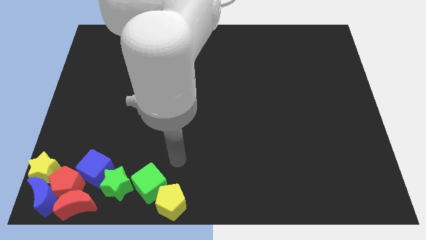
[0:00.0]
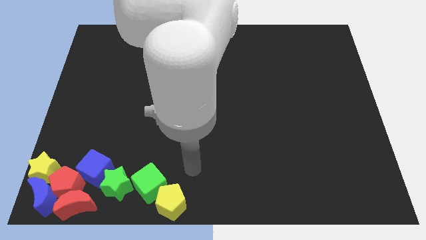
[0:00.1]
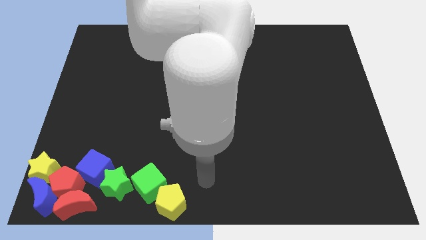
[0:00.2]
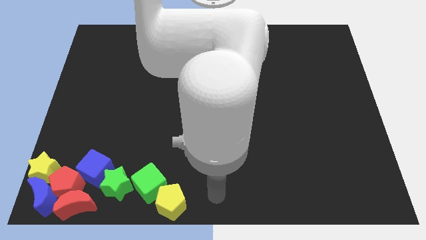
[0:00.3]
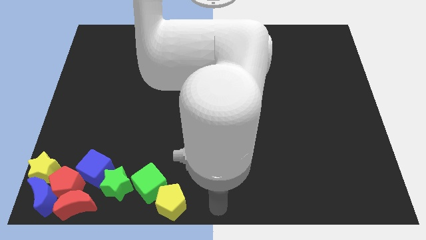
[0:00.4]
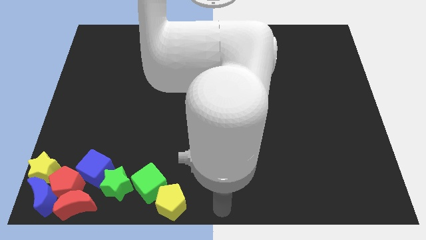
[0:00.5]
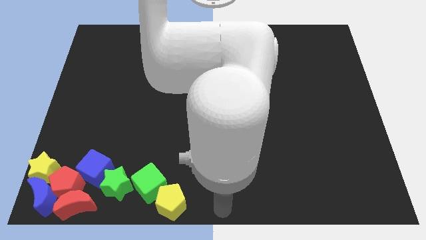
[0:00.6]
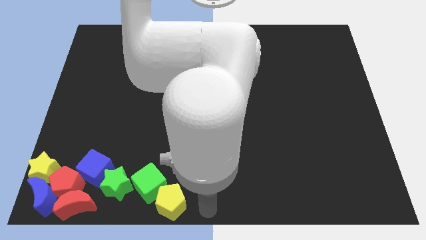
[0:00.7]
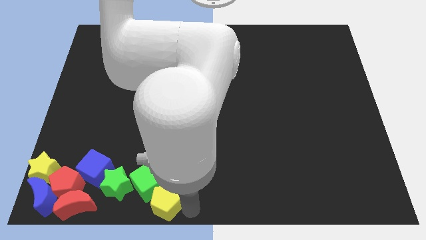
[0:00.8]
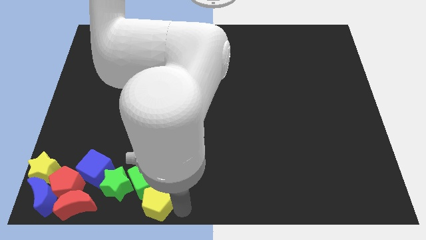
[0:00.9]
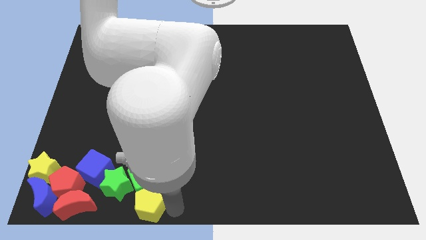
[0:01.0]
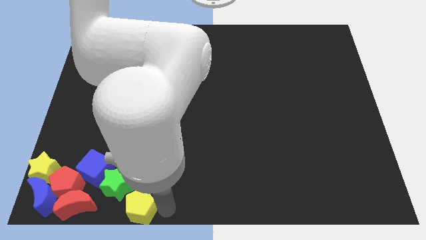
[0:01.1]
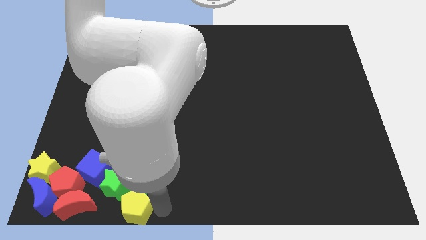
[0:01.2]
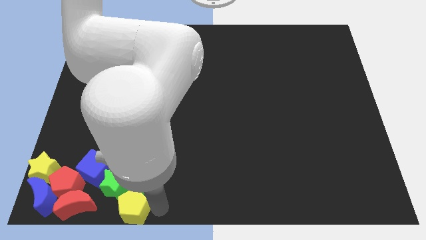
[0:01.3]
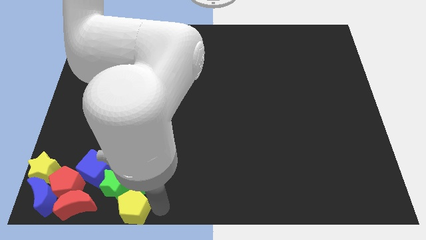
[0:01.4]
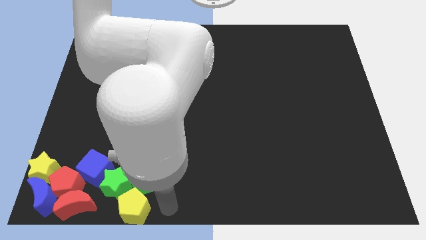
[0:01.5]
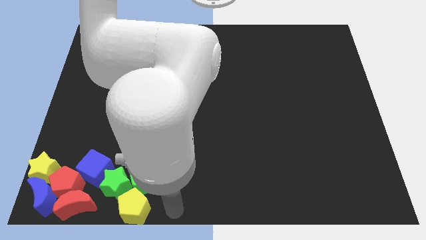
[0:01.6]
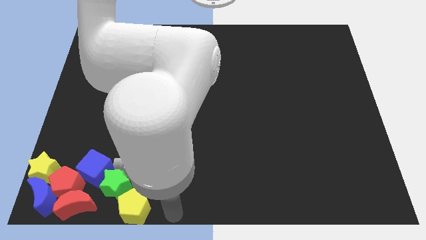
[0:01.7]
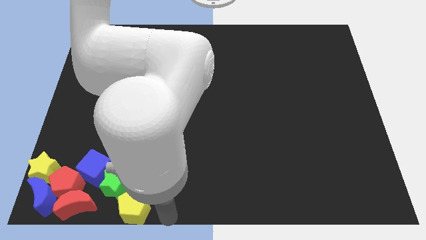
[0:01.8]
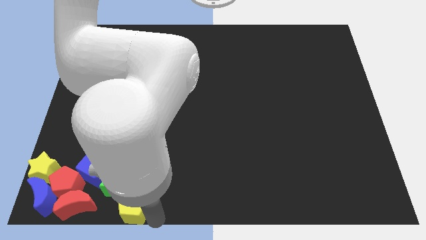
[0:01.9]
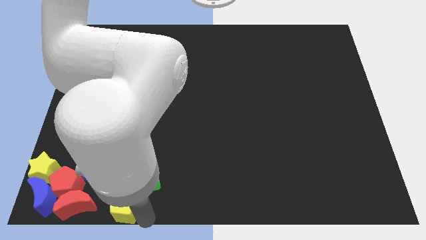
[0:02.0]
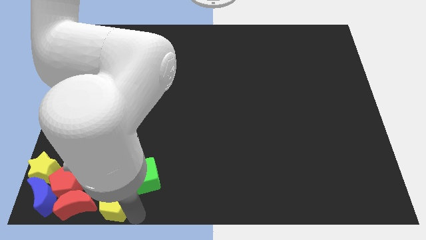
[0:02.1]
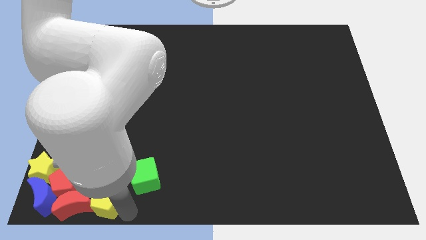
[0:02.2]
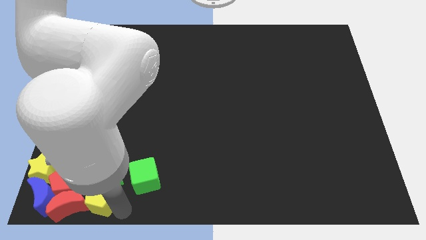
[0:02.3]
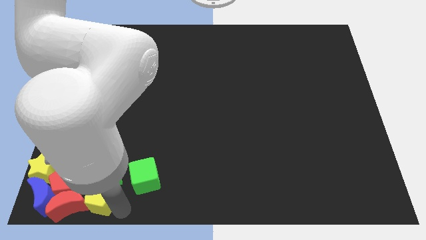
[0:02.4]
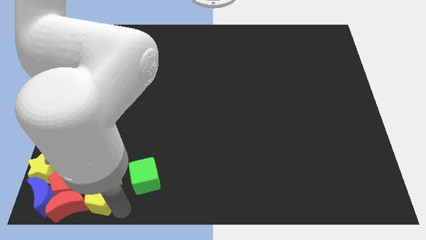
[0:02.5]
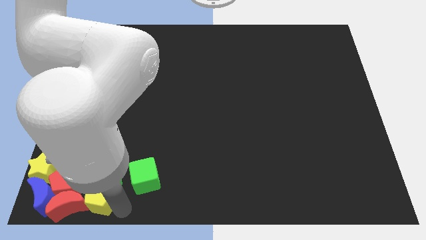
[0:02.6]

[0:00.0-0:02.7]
place the yellow pentagon into the red crescent

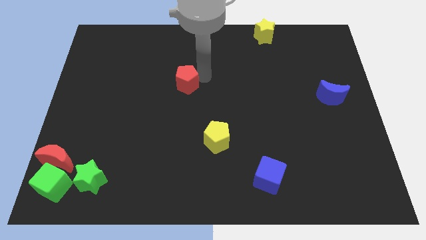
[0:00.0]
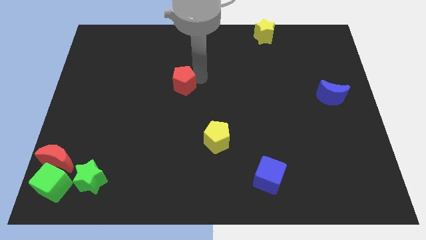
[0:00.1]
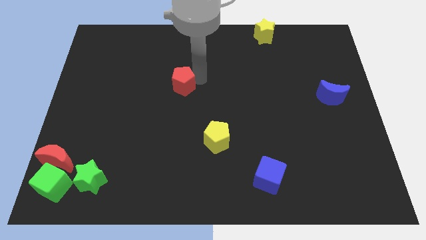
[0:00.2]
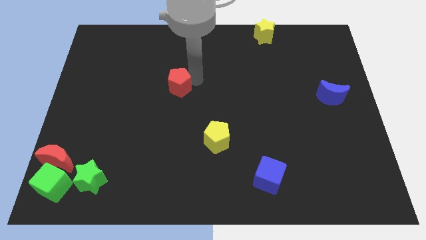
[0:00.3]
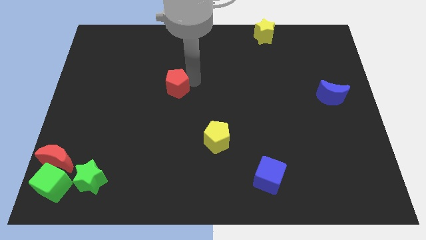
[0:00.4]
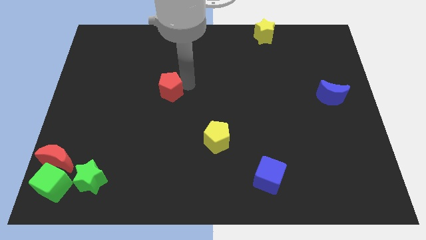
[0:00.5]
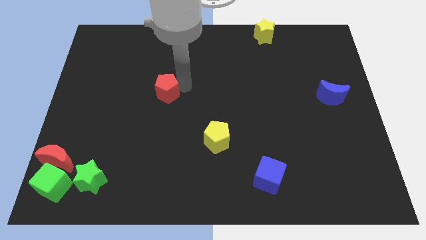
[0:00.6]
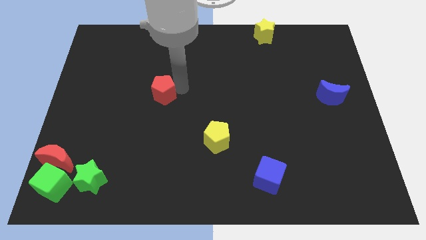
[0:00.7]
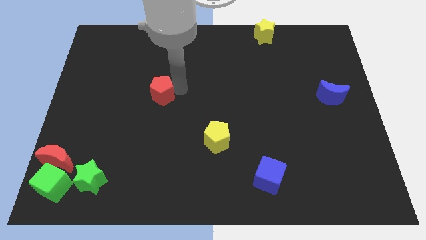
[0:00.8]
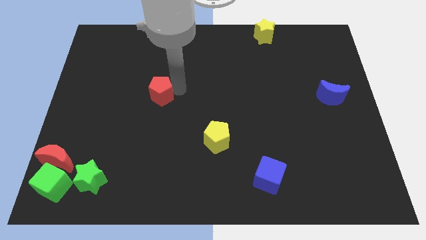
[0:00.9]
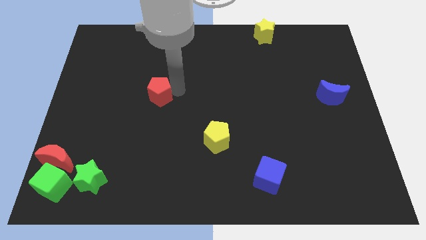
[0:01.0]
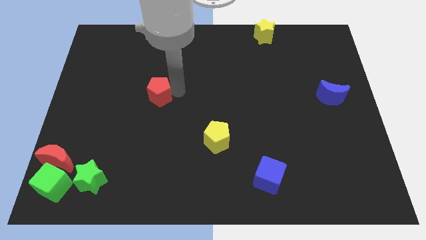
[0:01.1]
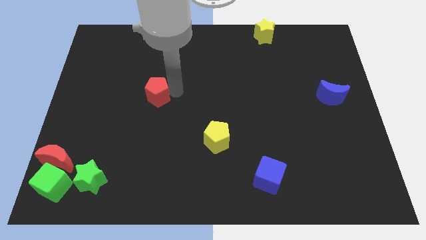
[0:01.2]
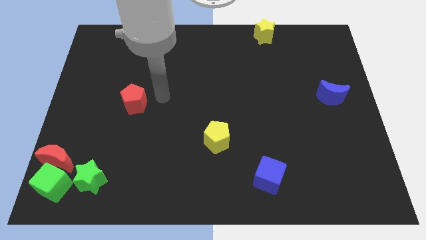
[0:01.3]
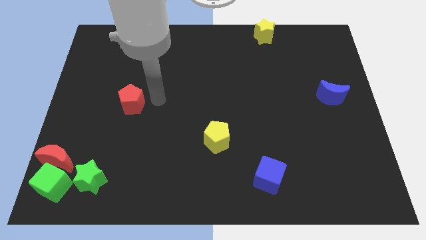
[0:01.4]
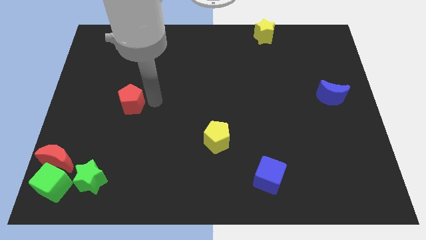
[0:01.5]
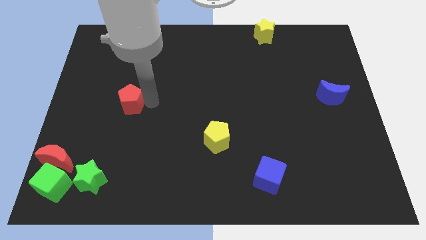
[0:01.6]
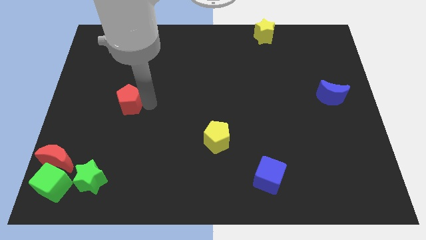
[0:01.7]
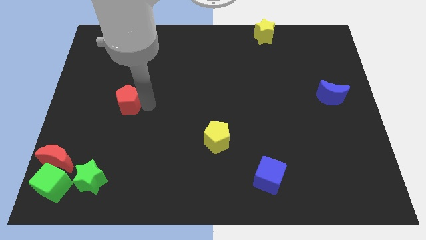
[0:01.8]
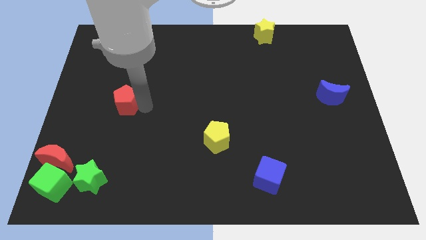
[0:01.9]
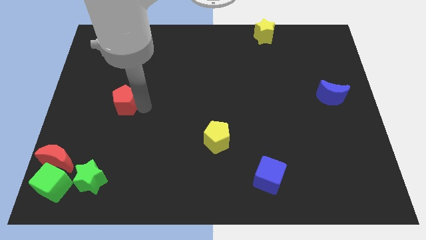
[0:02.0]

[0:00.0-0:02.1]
put the red pentagon parallel to the blue moon

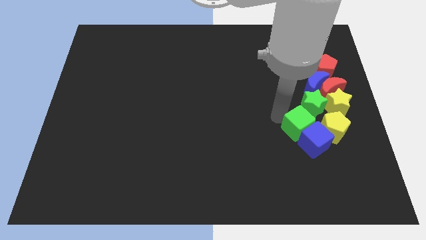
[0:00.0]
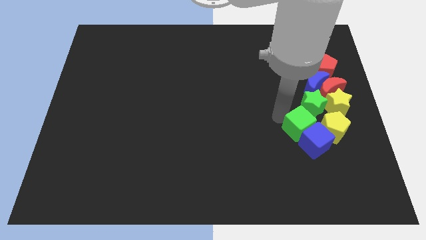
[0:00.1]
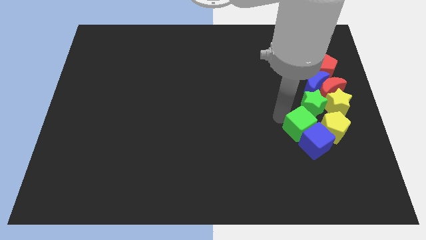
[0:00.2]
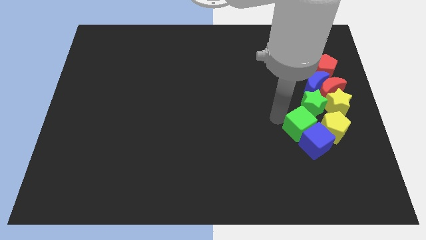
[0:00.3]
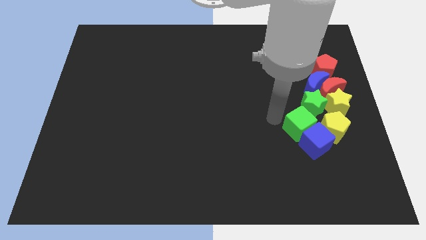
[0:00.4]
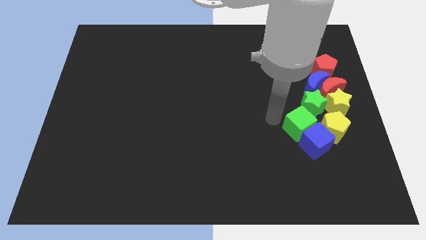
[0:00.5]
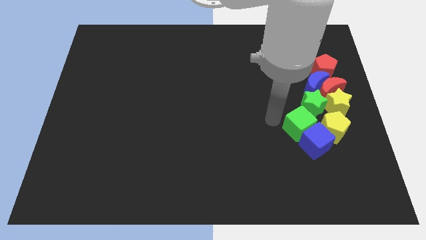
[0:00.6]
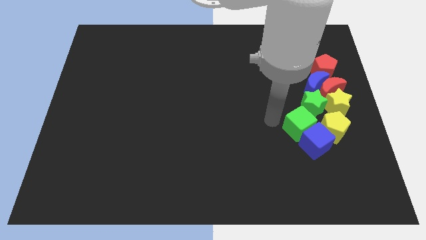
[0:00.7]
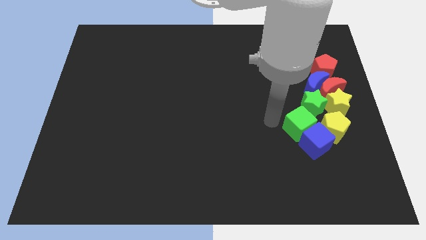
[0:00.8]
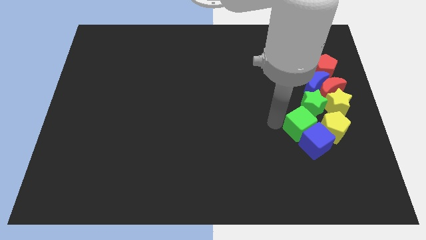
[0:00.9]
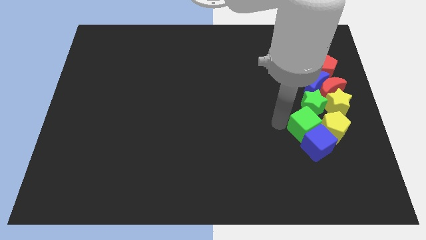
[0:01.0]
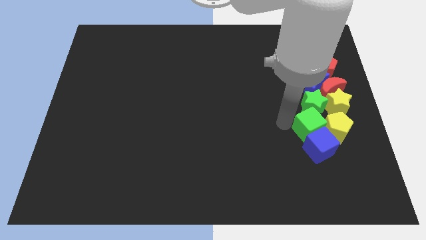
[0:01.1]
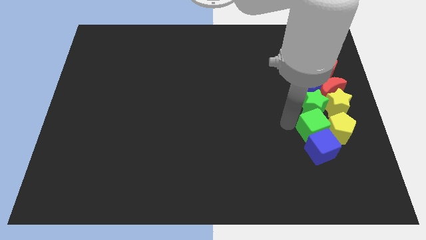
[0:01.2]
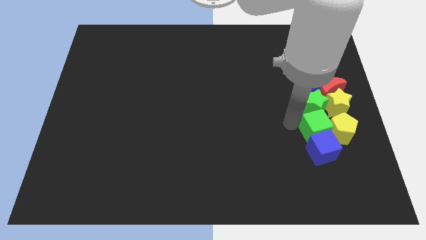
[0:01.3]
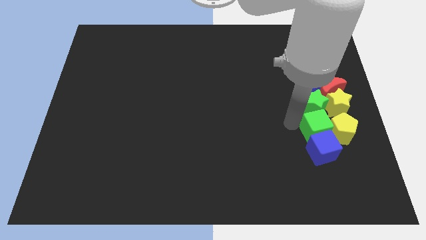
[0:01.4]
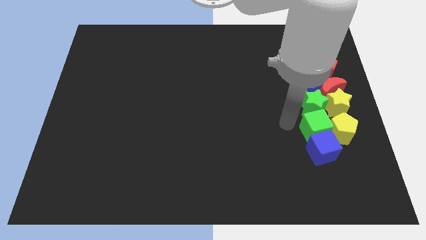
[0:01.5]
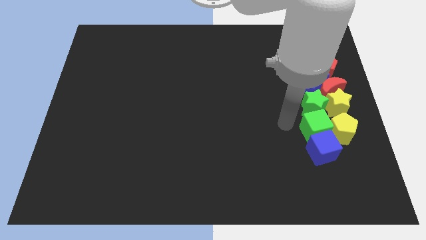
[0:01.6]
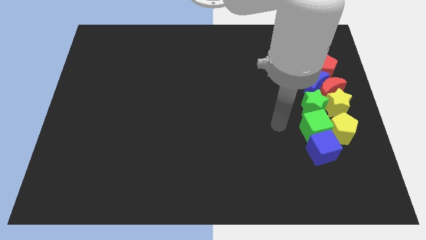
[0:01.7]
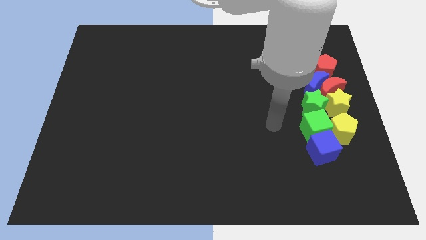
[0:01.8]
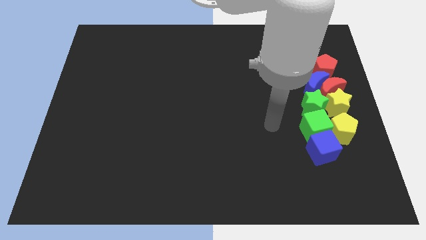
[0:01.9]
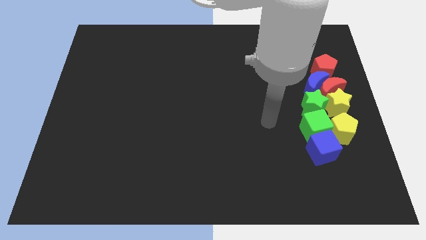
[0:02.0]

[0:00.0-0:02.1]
push green cube in between green star and blue cube

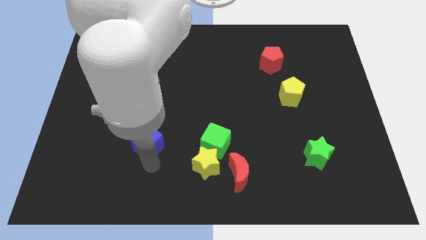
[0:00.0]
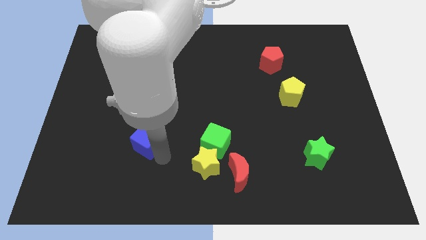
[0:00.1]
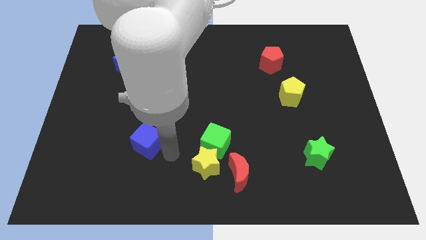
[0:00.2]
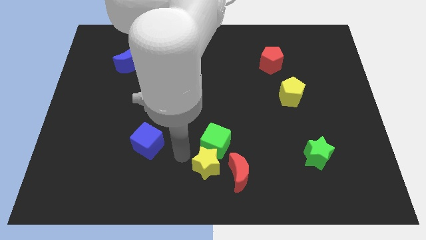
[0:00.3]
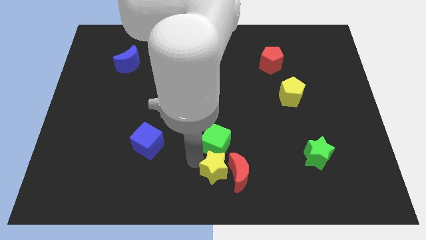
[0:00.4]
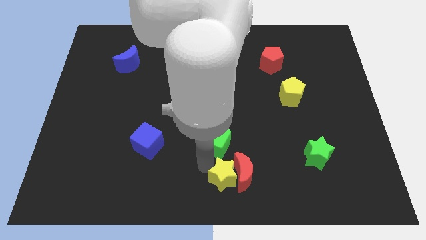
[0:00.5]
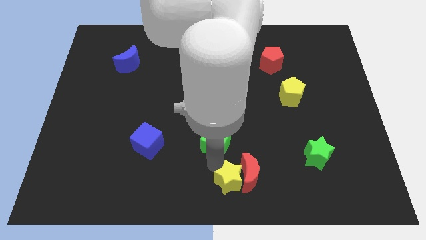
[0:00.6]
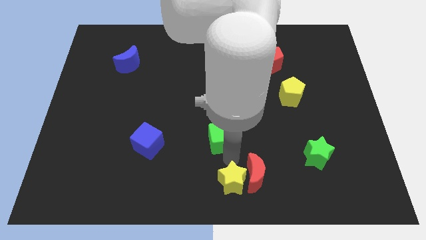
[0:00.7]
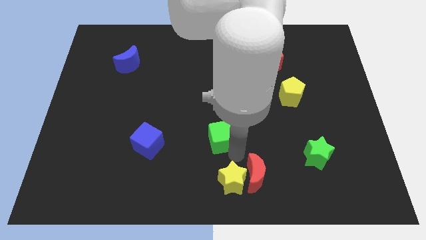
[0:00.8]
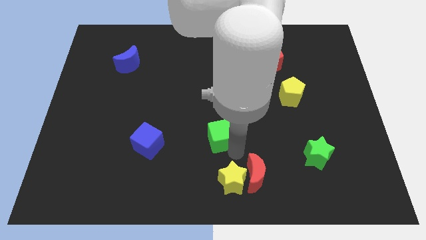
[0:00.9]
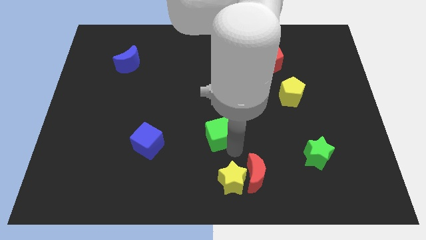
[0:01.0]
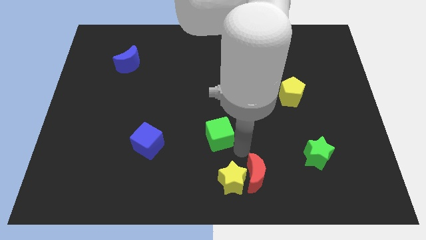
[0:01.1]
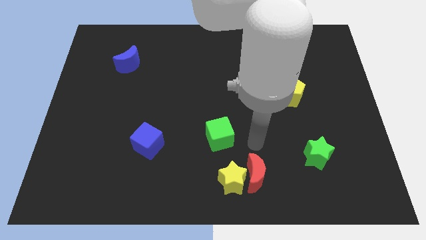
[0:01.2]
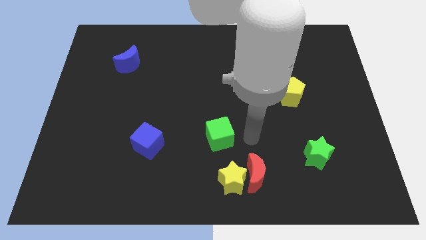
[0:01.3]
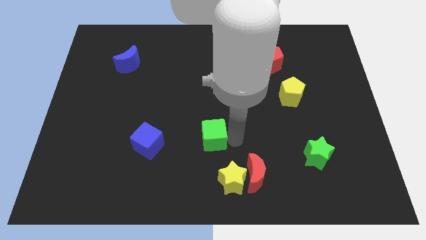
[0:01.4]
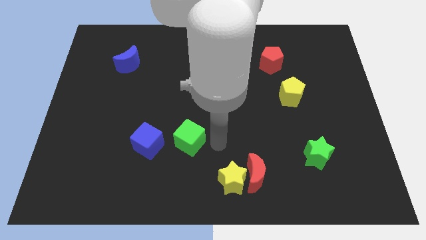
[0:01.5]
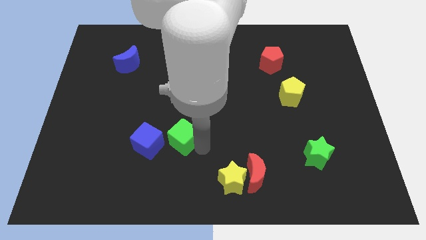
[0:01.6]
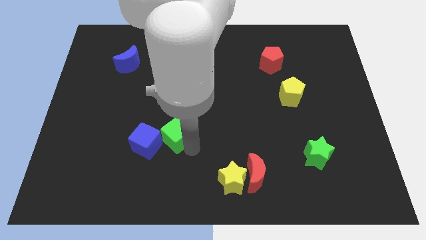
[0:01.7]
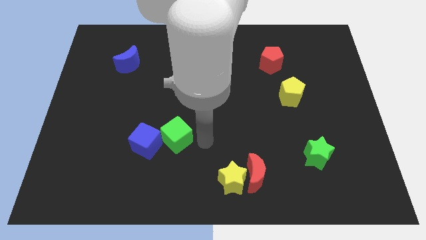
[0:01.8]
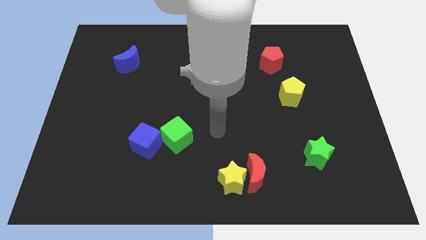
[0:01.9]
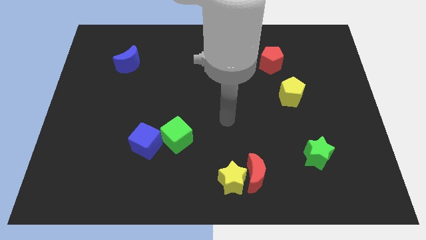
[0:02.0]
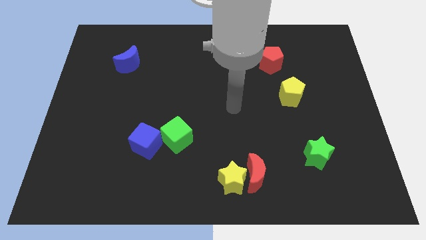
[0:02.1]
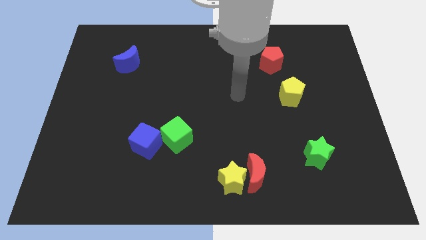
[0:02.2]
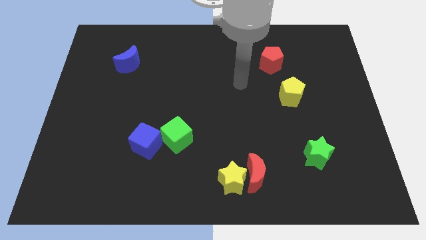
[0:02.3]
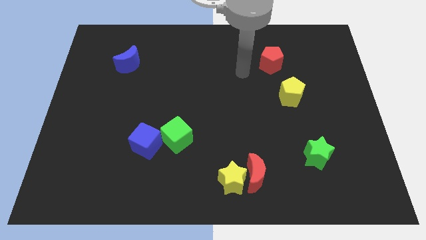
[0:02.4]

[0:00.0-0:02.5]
push green cube into the blue cube
